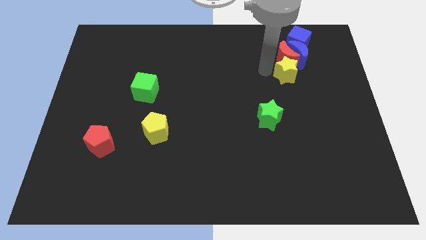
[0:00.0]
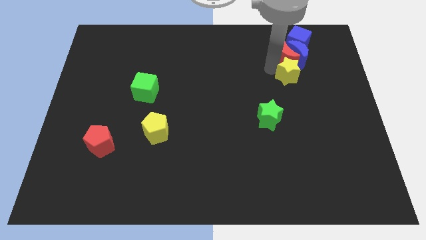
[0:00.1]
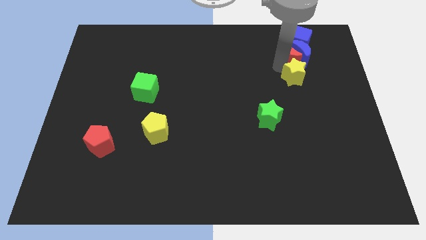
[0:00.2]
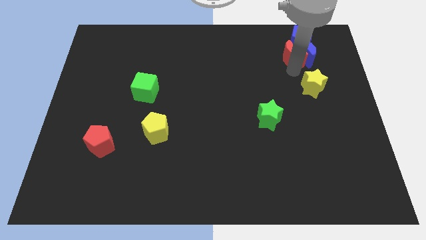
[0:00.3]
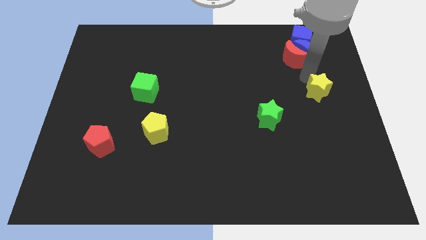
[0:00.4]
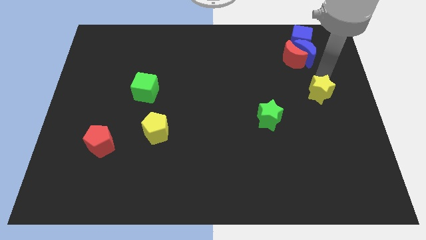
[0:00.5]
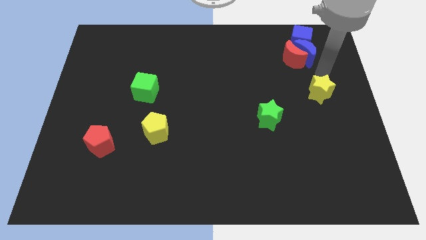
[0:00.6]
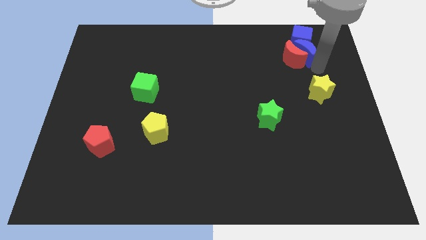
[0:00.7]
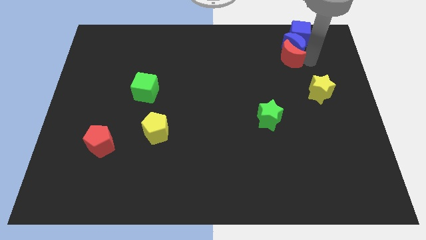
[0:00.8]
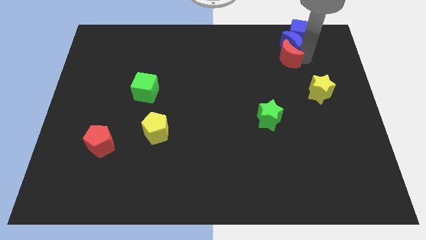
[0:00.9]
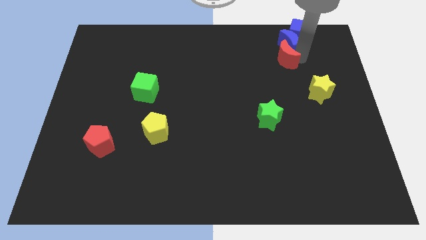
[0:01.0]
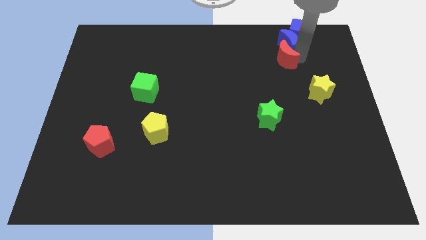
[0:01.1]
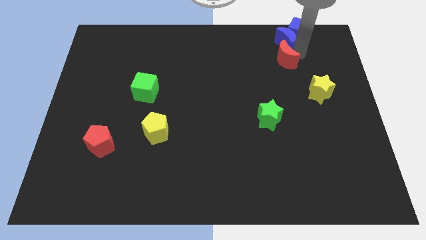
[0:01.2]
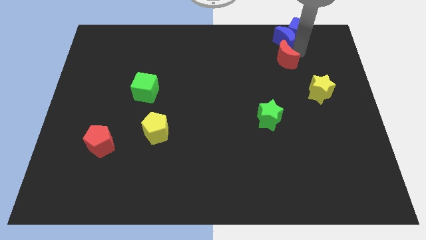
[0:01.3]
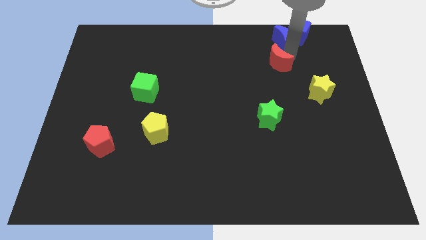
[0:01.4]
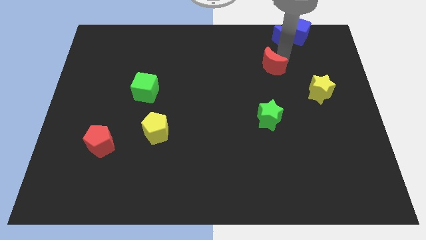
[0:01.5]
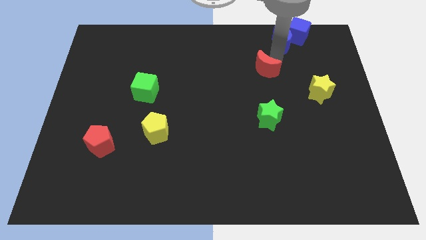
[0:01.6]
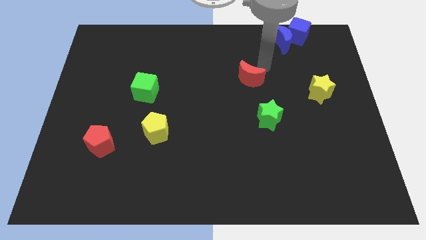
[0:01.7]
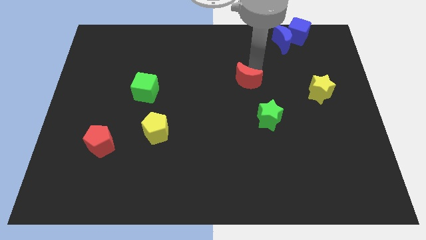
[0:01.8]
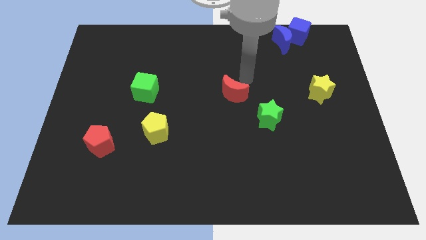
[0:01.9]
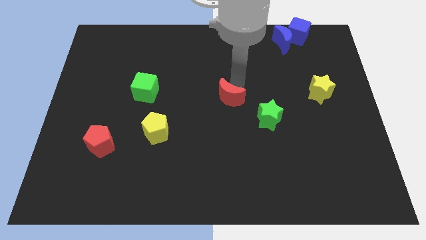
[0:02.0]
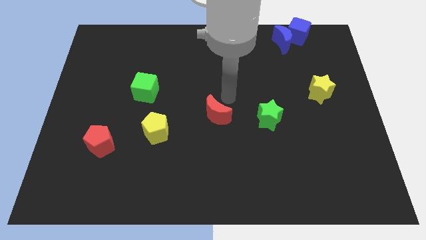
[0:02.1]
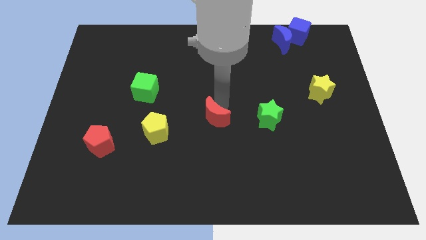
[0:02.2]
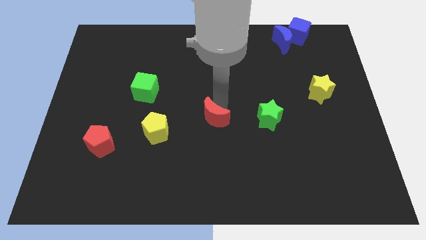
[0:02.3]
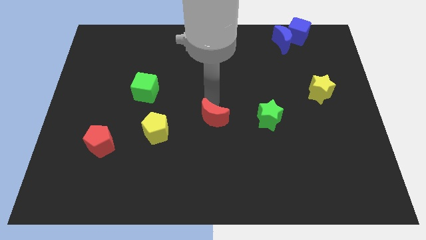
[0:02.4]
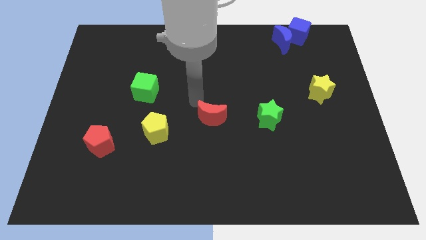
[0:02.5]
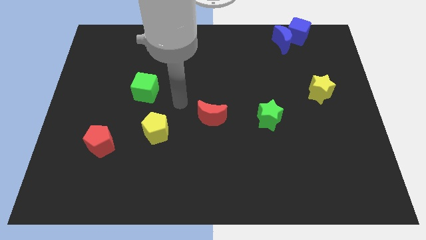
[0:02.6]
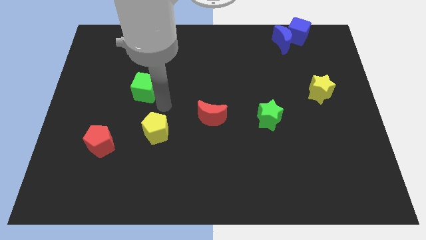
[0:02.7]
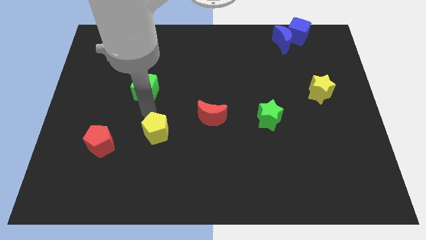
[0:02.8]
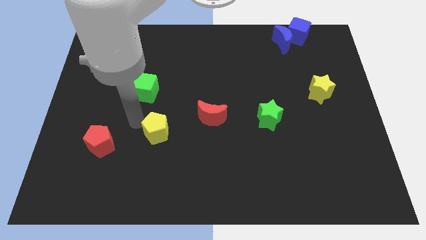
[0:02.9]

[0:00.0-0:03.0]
push red moon towards middle of the board

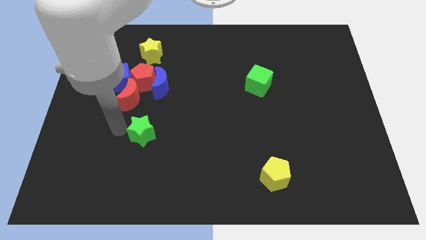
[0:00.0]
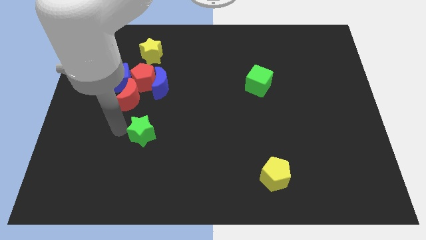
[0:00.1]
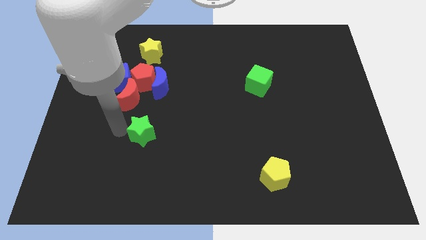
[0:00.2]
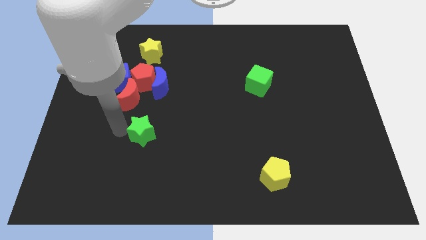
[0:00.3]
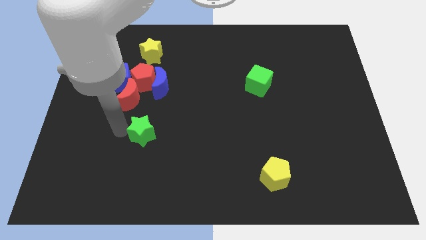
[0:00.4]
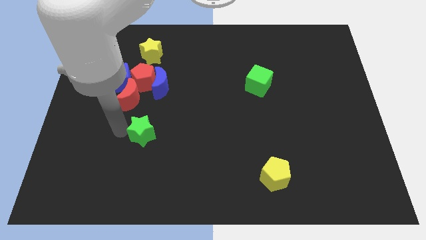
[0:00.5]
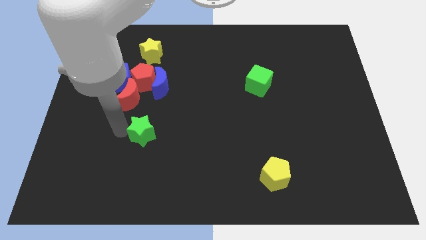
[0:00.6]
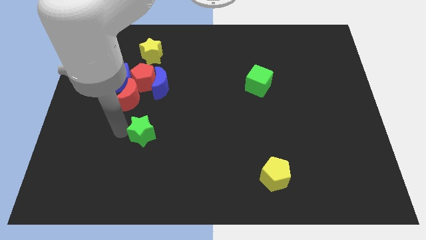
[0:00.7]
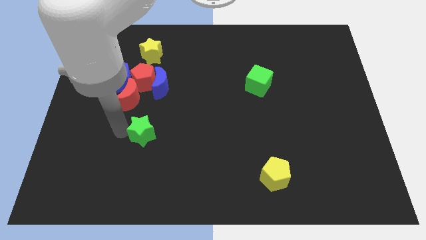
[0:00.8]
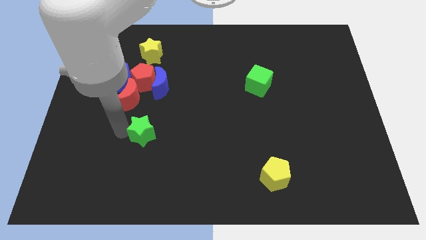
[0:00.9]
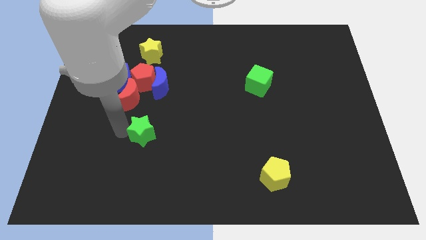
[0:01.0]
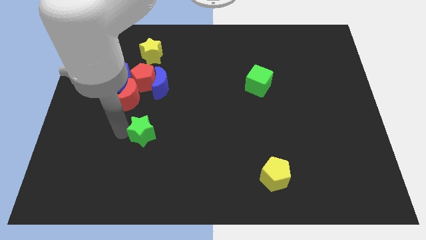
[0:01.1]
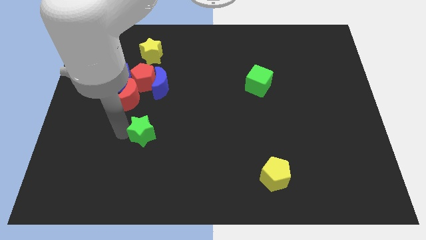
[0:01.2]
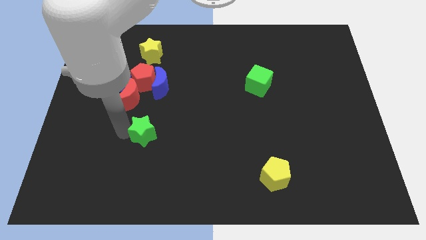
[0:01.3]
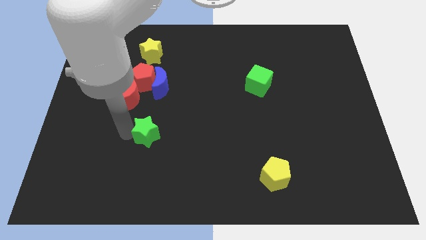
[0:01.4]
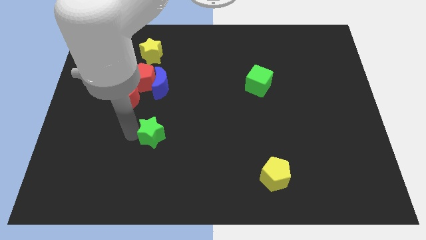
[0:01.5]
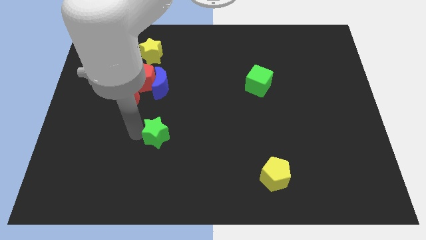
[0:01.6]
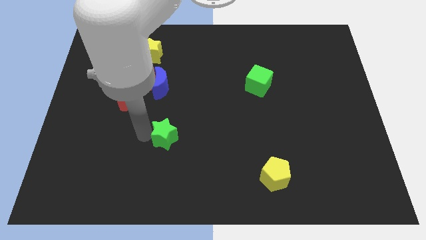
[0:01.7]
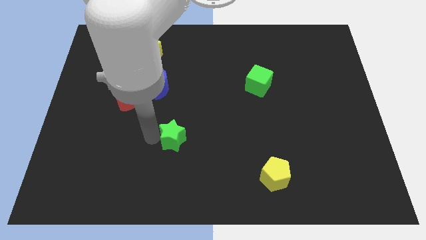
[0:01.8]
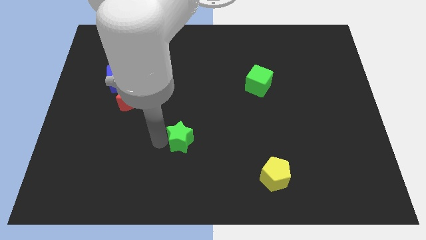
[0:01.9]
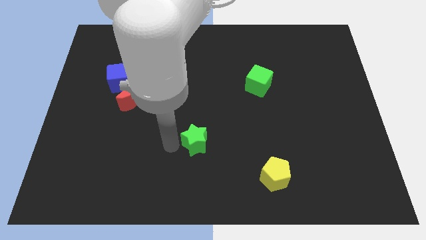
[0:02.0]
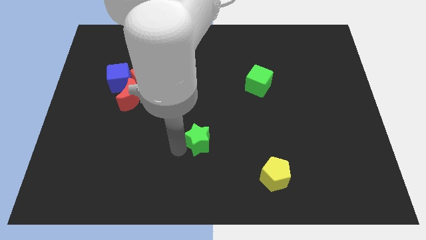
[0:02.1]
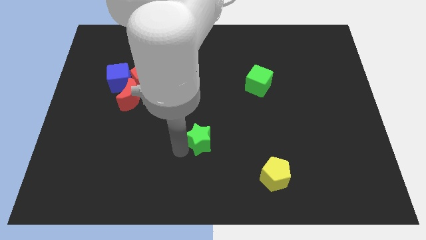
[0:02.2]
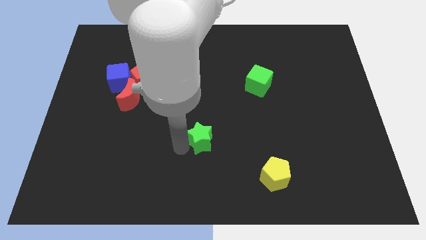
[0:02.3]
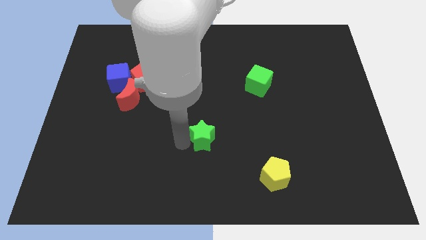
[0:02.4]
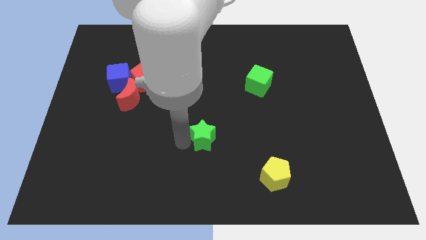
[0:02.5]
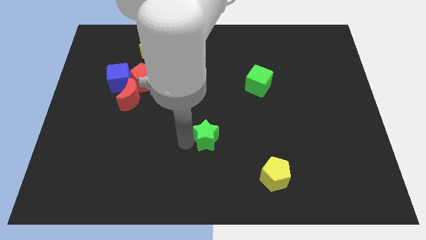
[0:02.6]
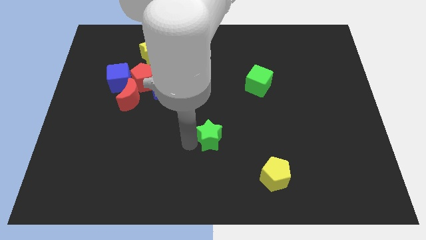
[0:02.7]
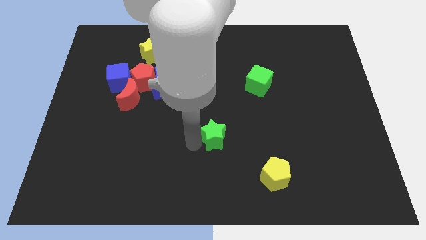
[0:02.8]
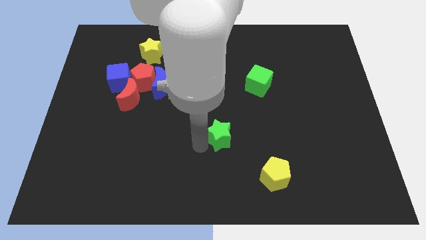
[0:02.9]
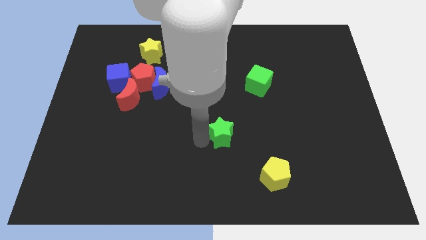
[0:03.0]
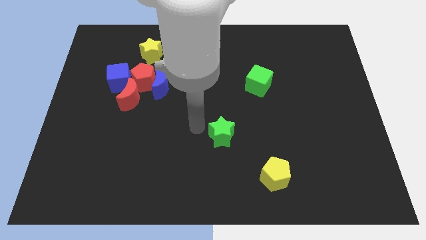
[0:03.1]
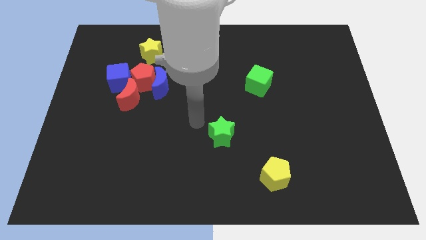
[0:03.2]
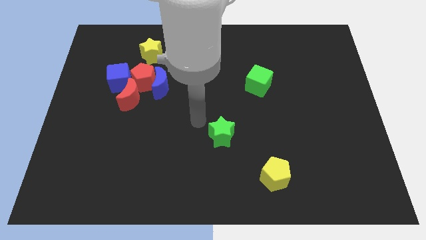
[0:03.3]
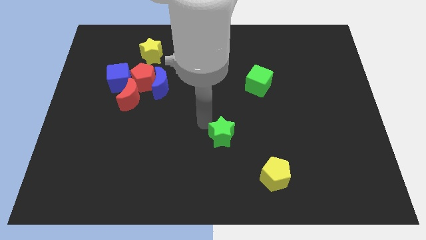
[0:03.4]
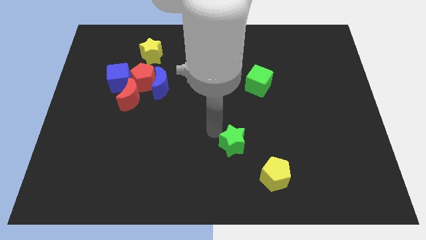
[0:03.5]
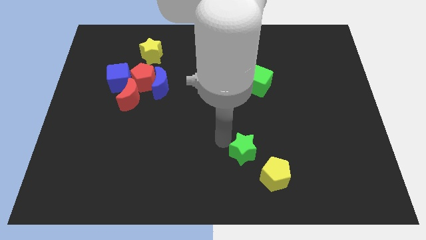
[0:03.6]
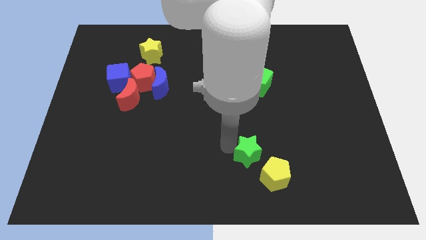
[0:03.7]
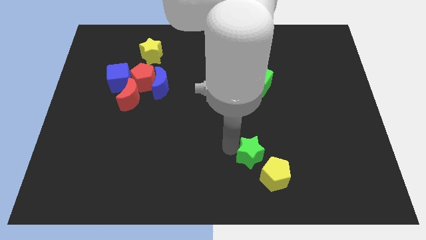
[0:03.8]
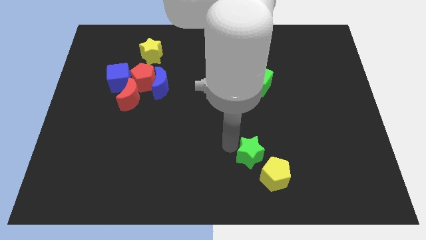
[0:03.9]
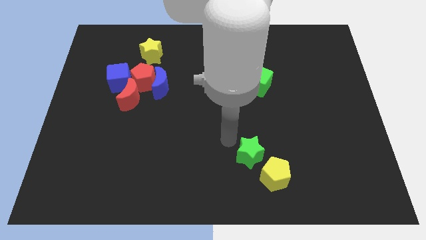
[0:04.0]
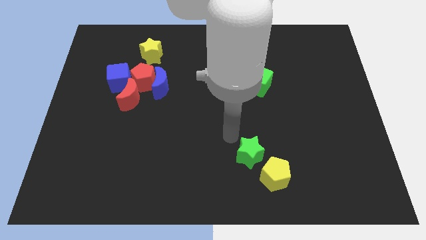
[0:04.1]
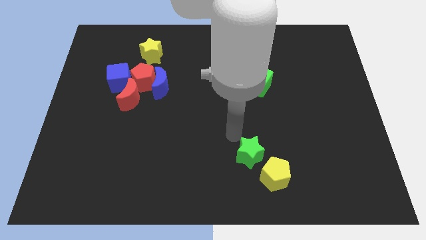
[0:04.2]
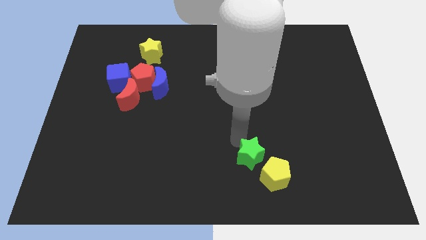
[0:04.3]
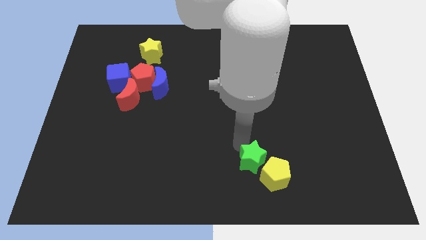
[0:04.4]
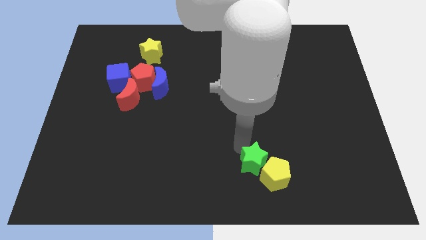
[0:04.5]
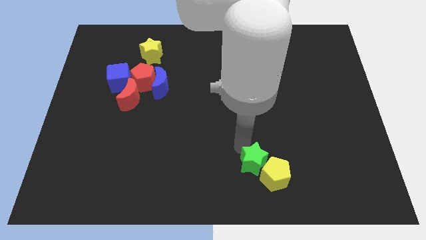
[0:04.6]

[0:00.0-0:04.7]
push the green star diagonally to the yellow pentagon

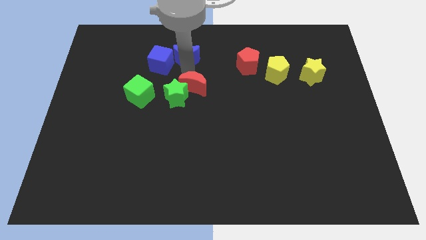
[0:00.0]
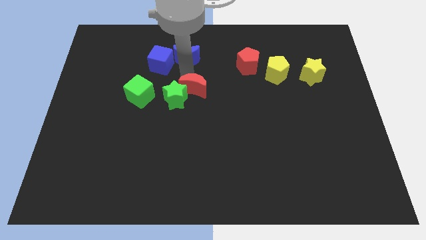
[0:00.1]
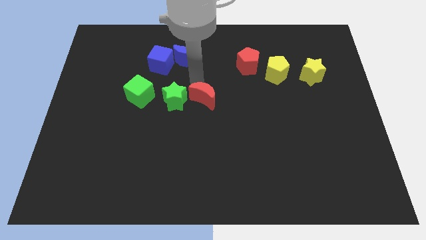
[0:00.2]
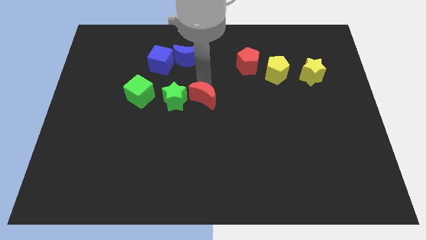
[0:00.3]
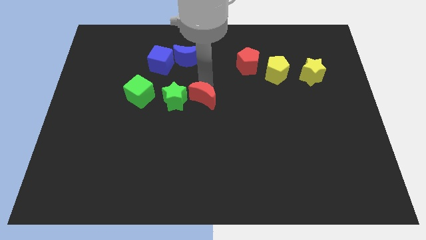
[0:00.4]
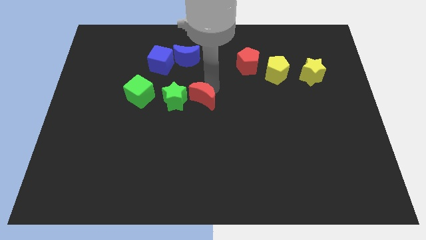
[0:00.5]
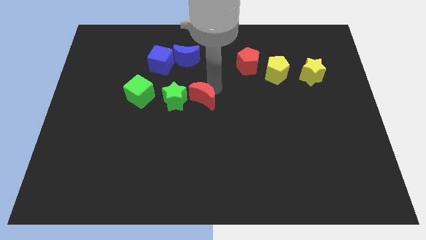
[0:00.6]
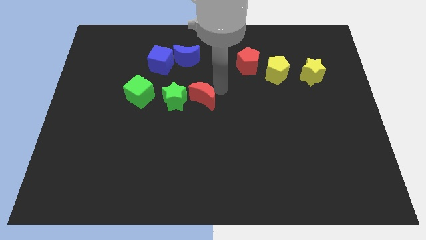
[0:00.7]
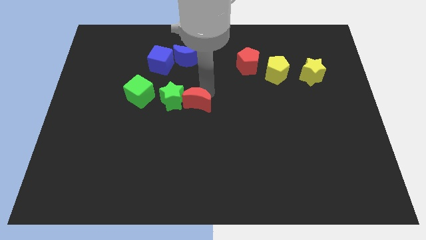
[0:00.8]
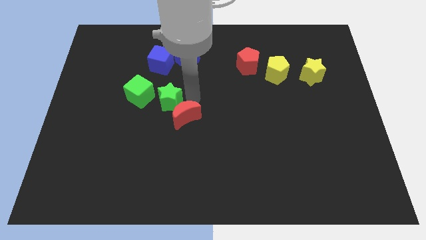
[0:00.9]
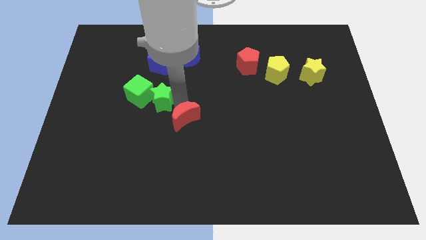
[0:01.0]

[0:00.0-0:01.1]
move the red crescent downwards to the center of the board
